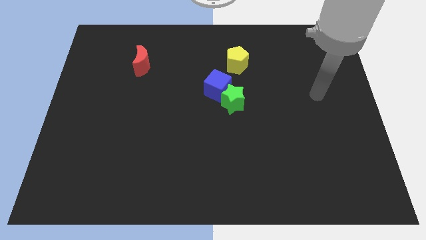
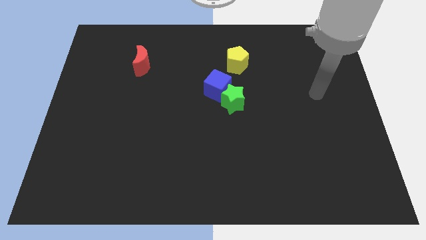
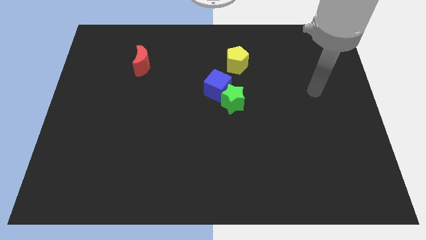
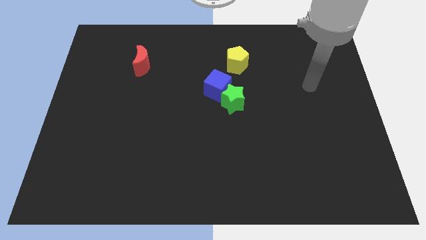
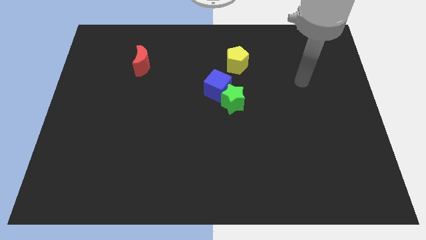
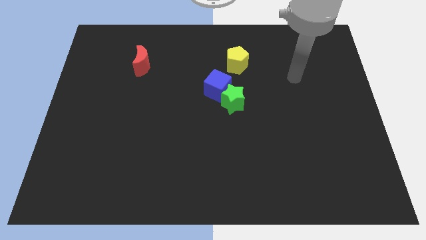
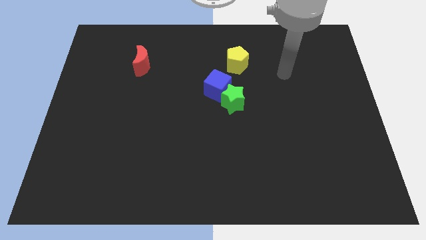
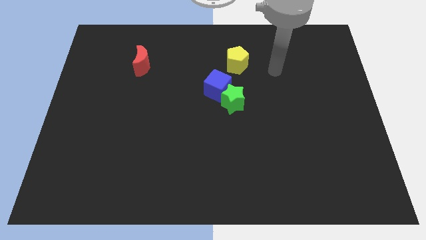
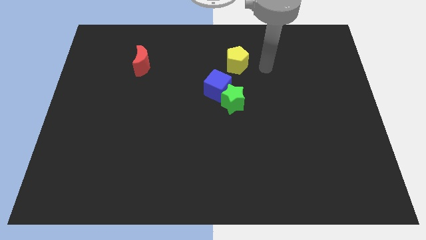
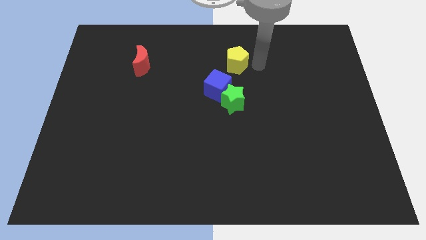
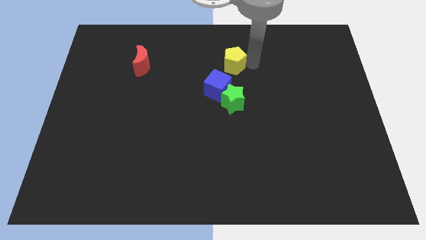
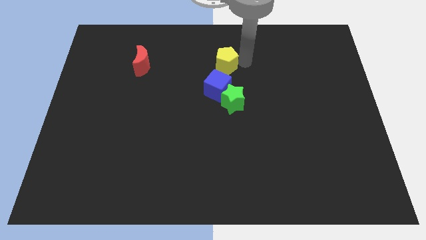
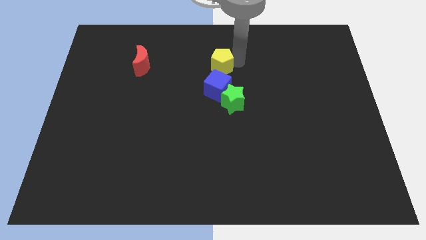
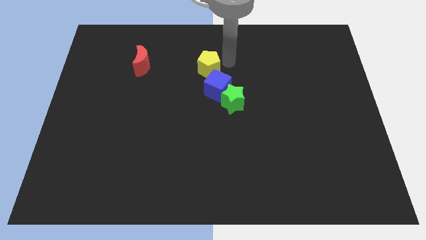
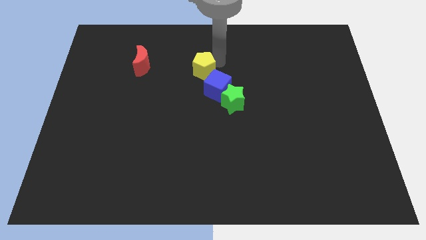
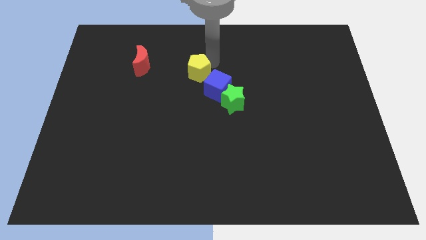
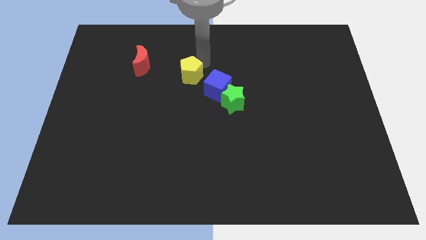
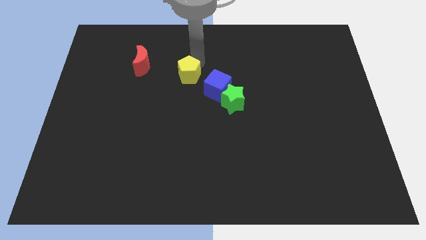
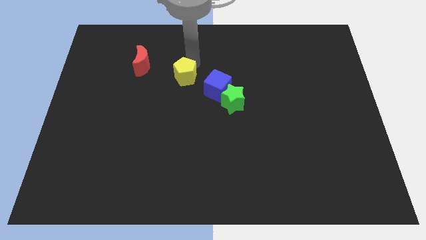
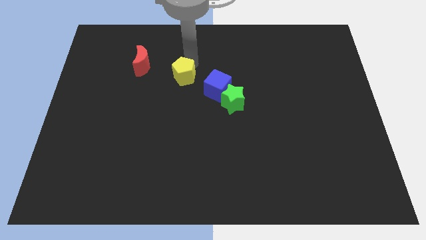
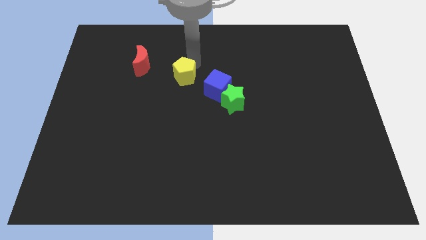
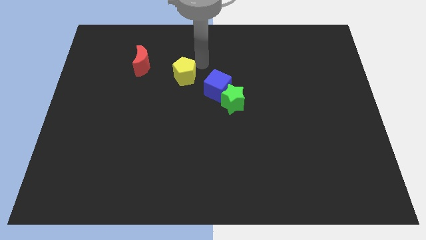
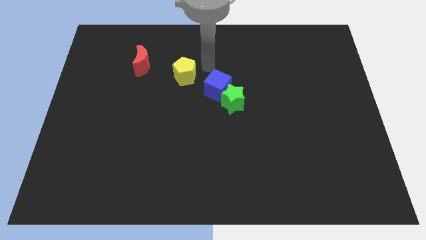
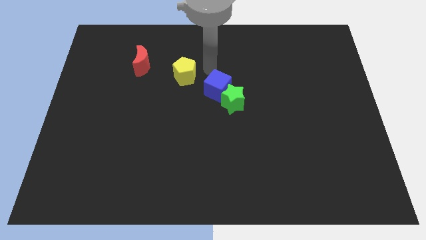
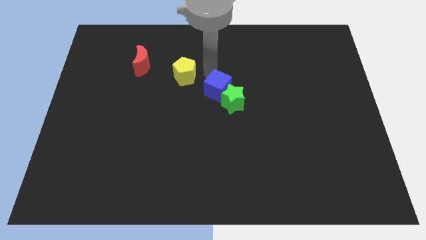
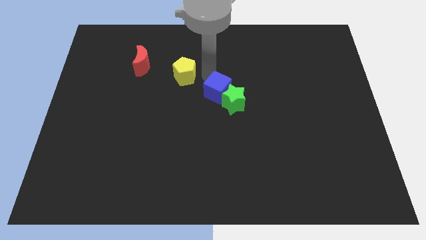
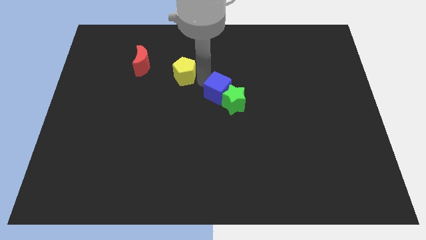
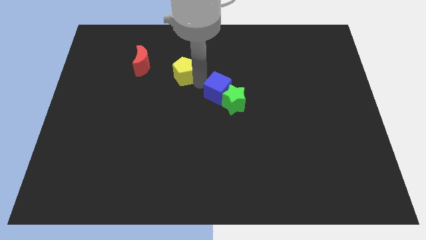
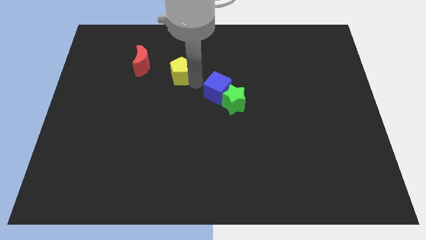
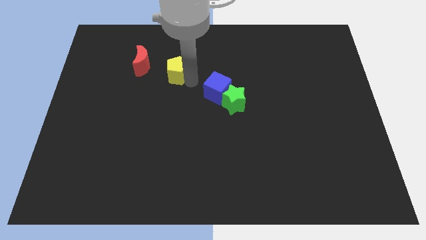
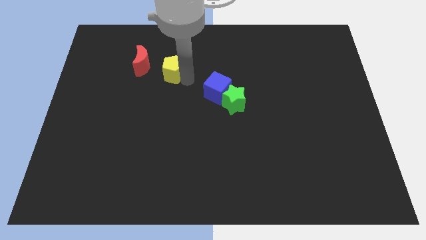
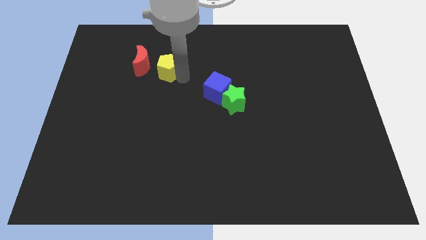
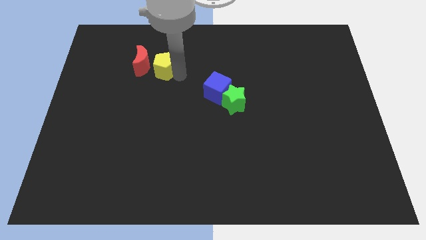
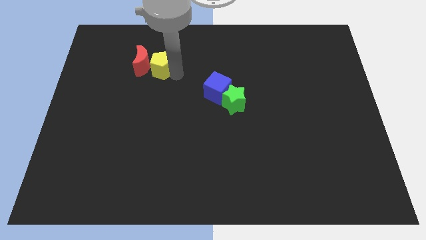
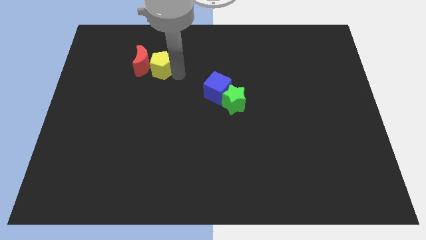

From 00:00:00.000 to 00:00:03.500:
move the yellow block close to the red moon

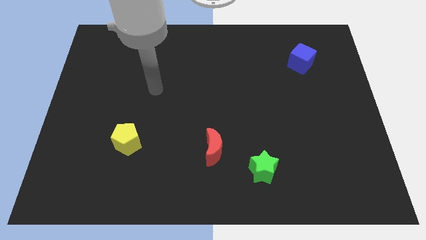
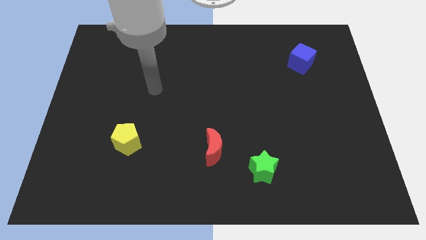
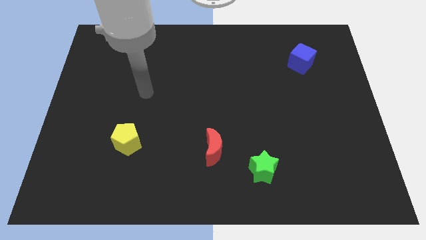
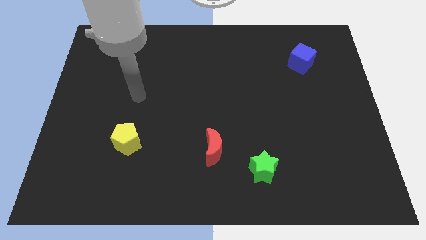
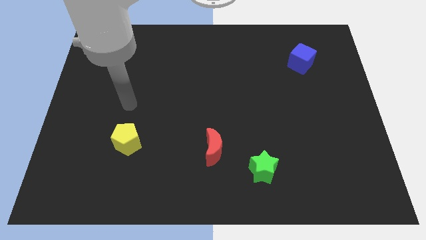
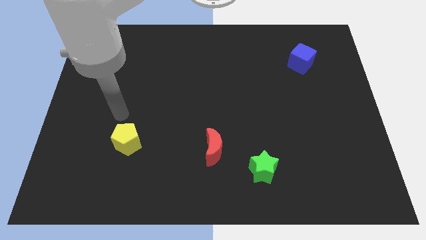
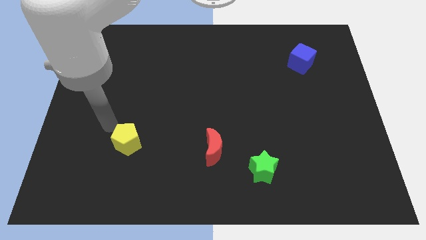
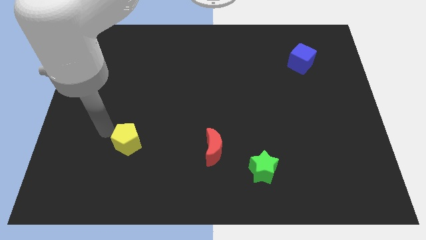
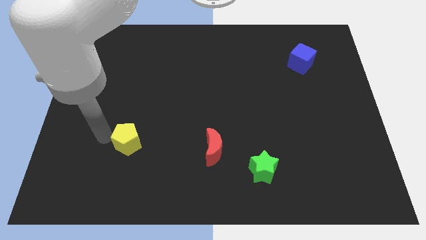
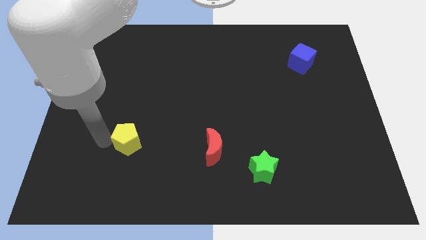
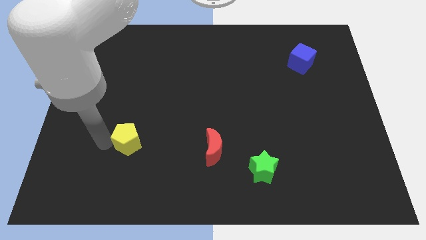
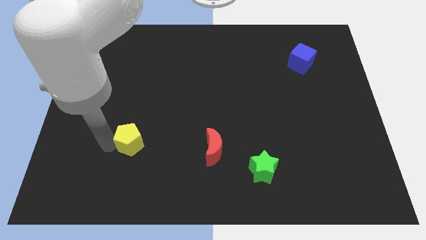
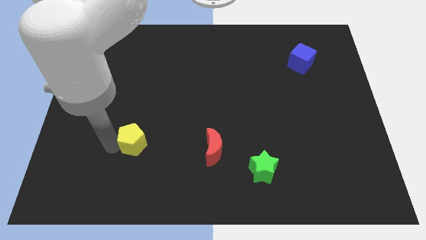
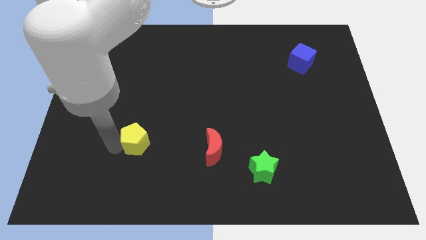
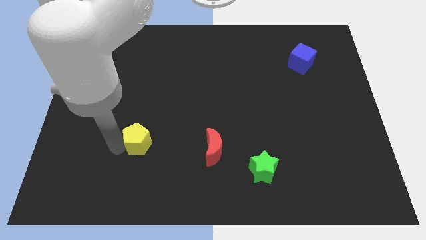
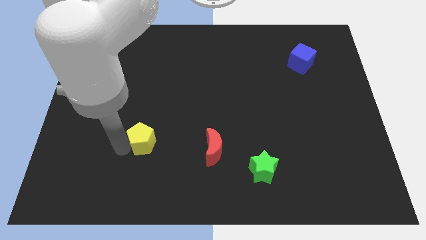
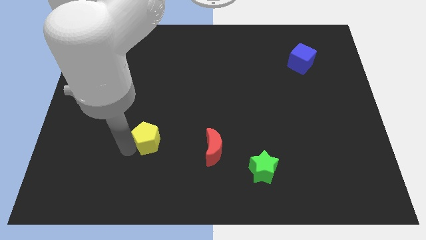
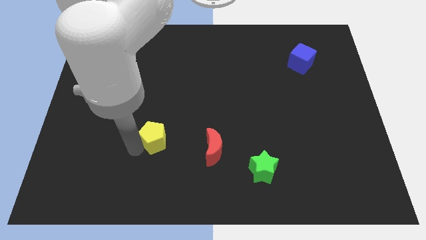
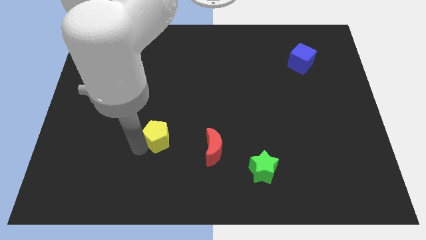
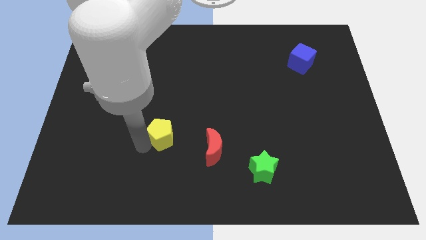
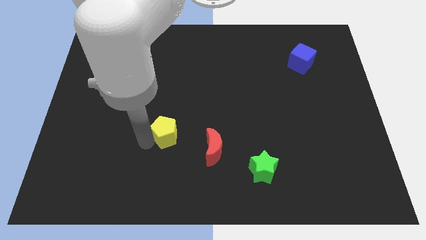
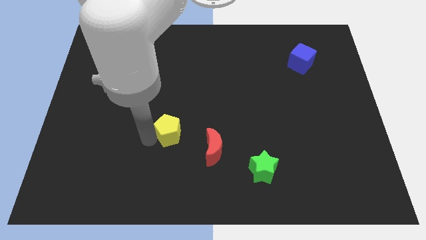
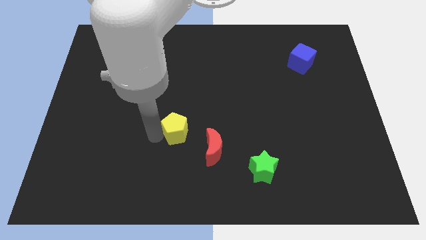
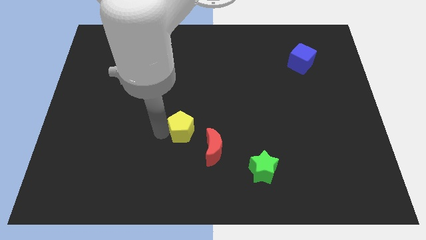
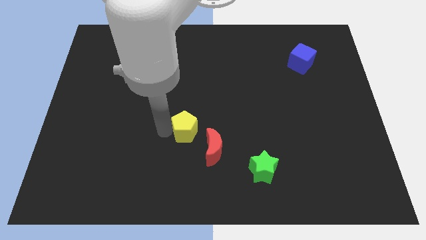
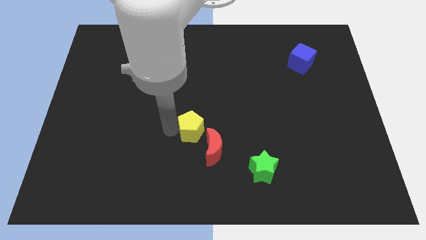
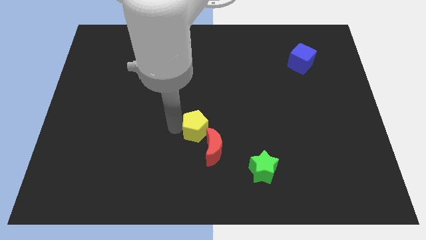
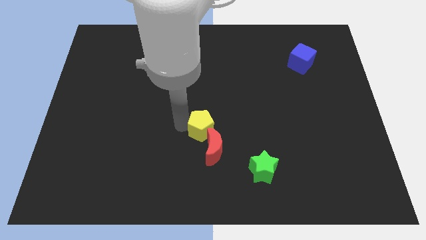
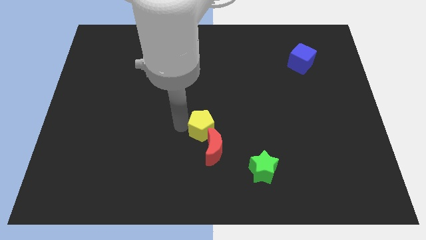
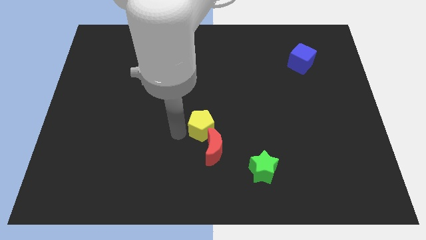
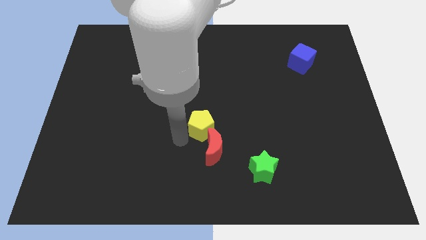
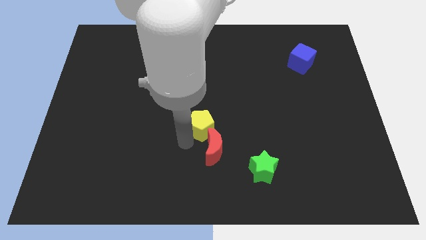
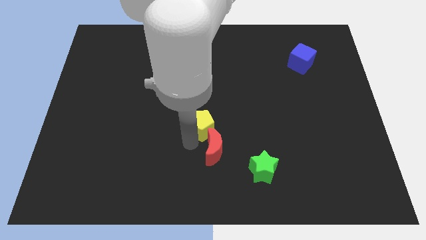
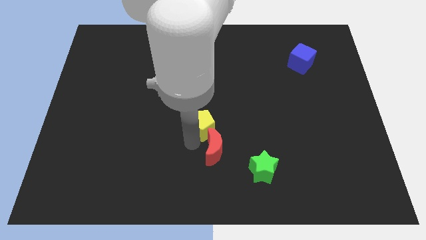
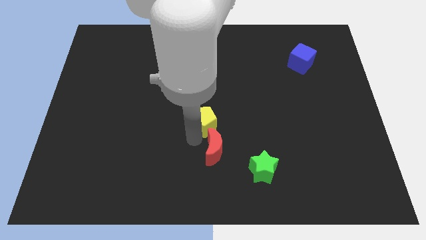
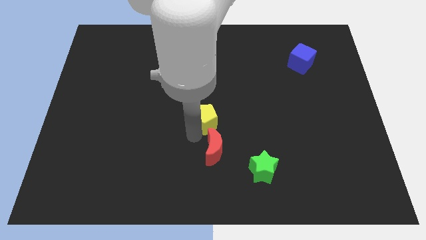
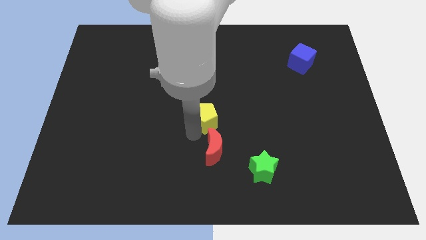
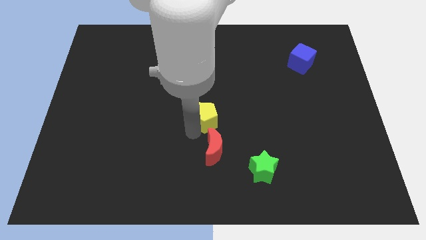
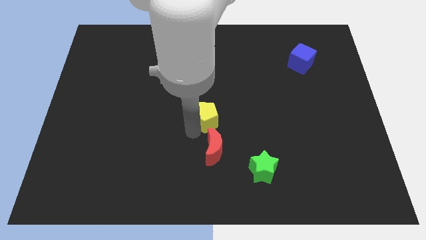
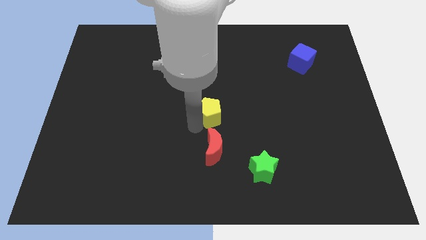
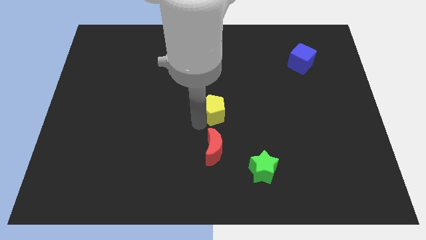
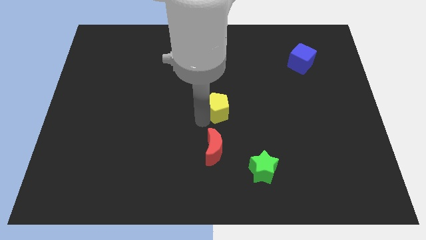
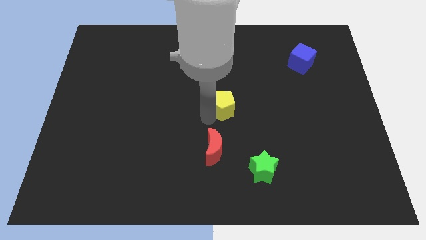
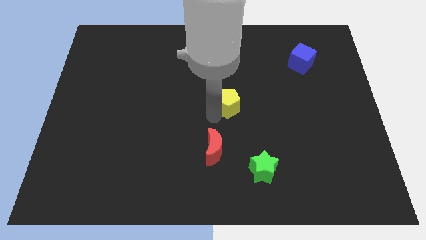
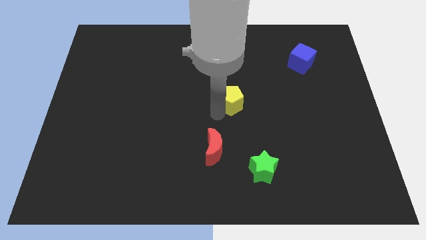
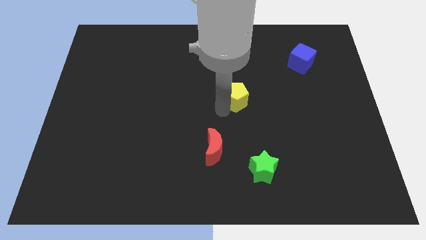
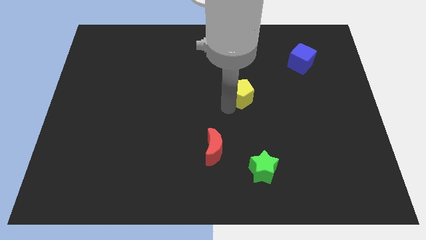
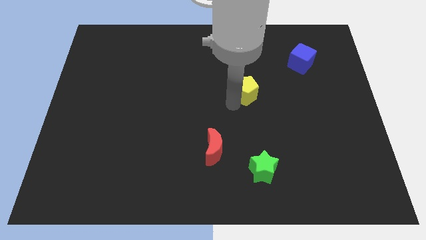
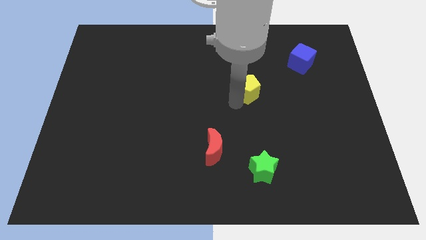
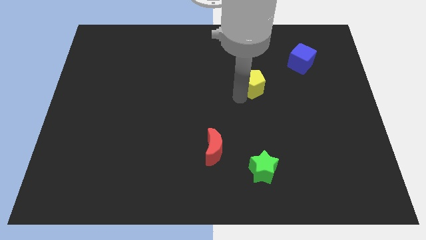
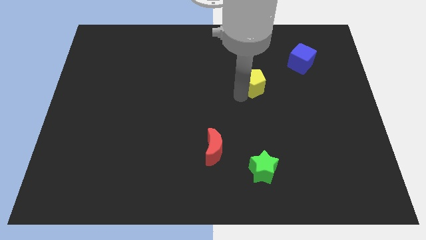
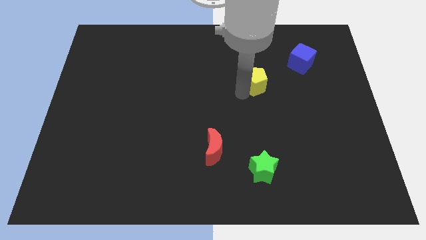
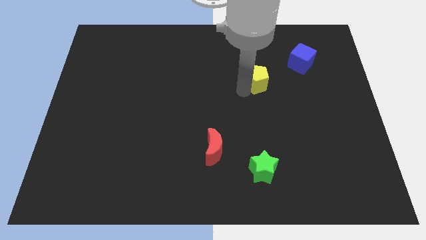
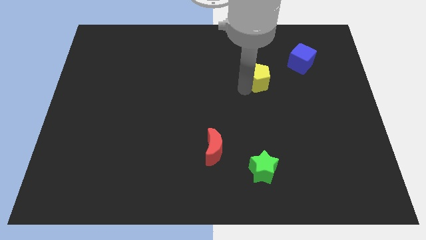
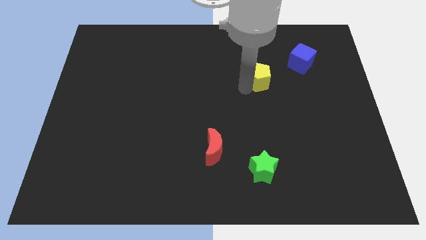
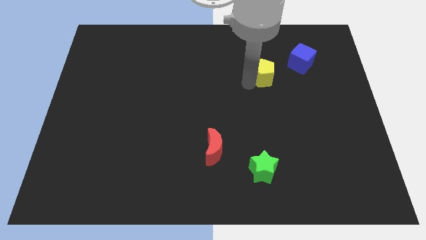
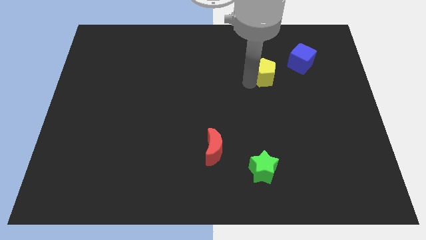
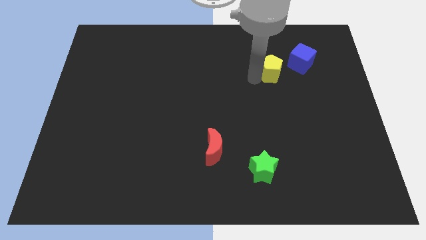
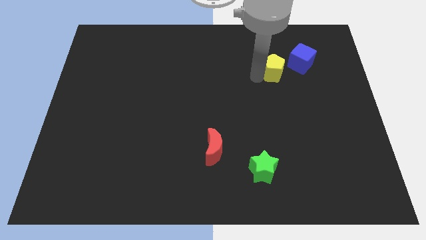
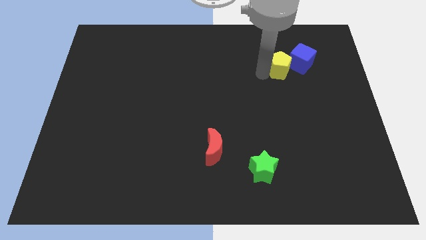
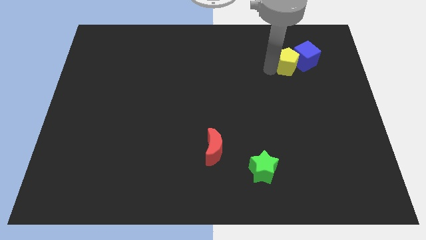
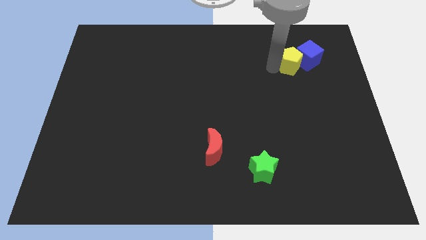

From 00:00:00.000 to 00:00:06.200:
slide the yellow pentagon next to the blue block
